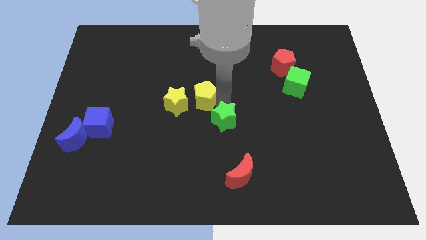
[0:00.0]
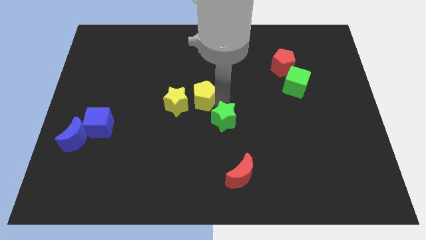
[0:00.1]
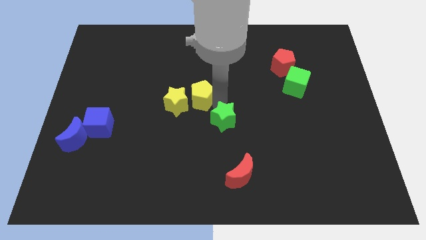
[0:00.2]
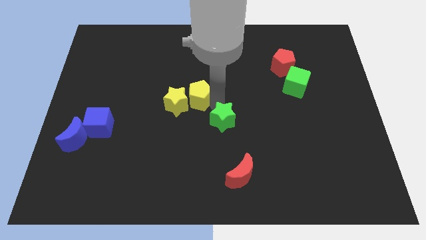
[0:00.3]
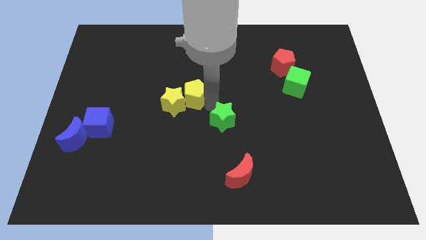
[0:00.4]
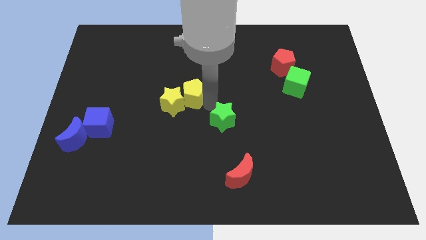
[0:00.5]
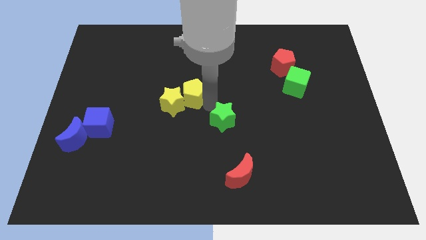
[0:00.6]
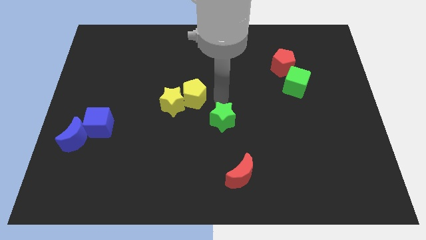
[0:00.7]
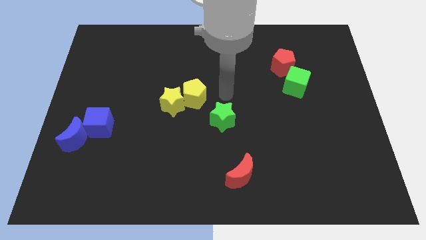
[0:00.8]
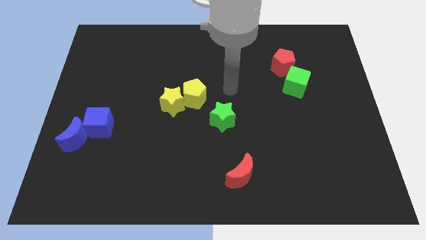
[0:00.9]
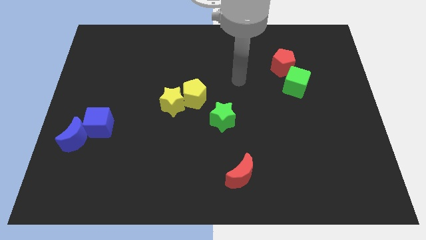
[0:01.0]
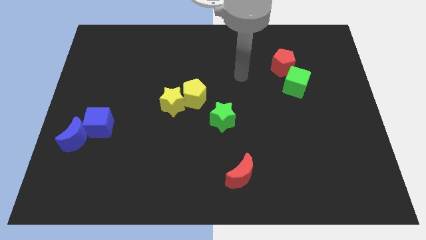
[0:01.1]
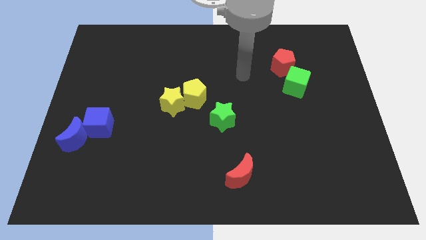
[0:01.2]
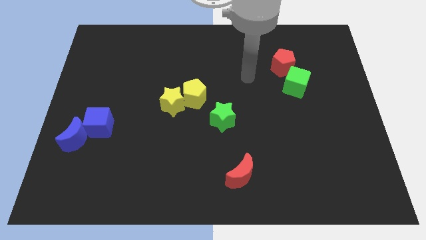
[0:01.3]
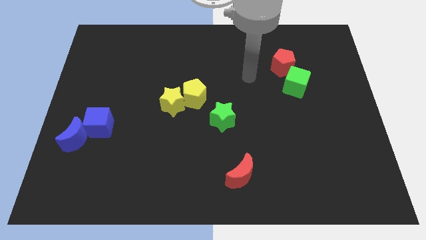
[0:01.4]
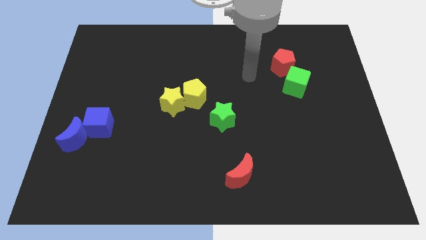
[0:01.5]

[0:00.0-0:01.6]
move the yellow pentagon into yellow star

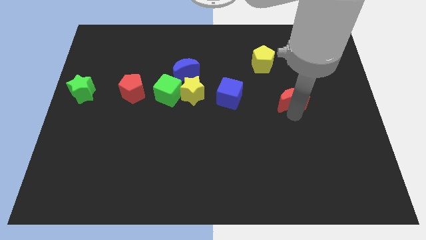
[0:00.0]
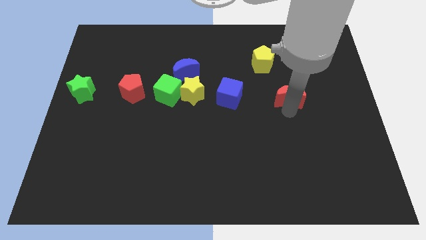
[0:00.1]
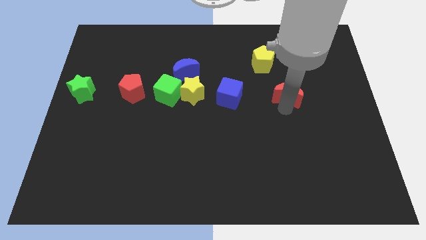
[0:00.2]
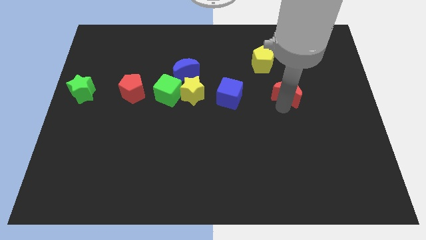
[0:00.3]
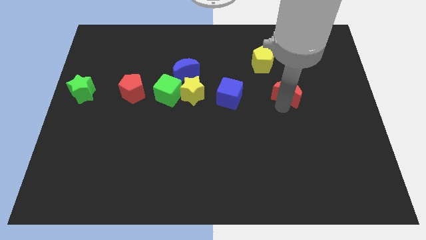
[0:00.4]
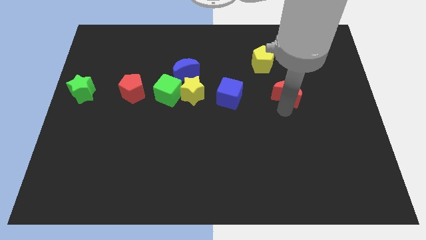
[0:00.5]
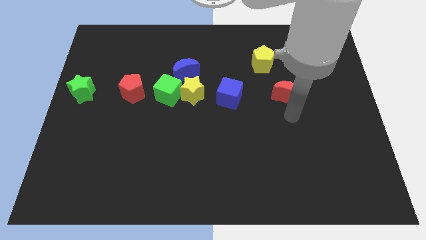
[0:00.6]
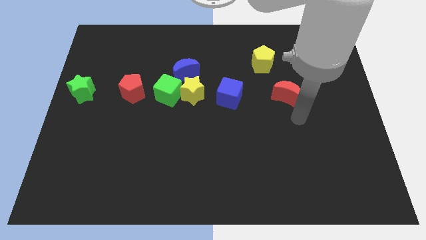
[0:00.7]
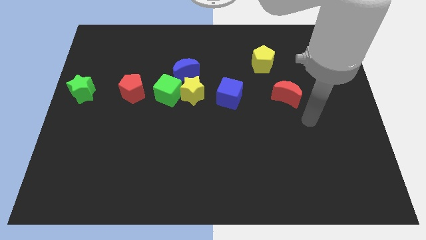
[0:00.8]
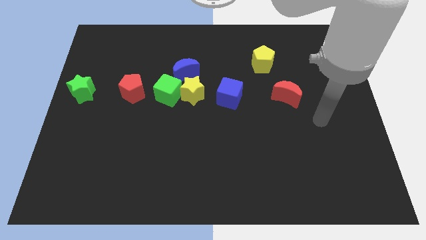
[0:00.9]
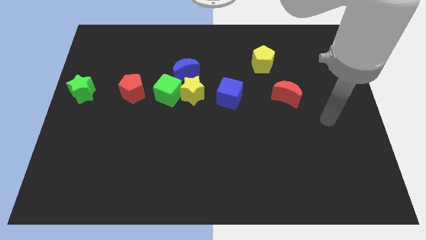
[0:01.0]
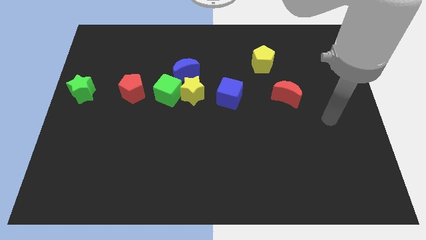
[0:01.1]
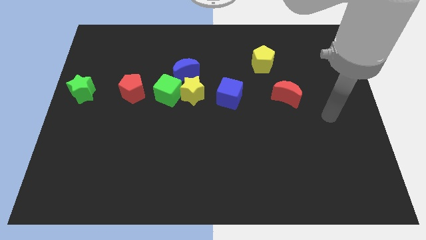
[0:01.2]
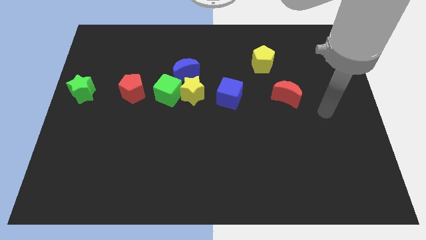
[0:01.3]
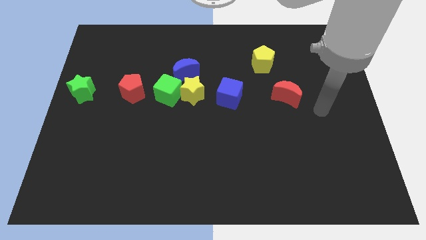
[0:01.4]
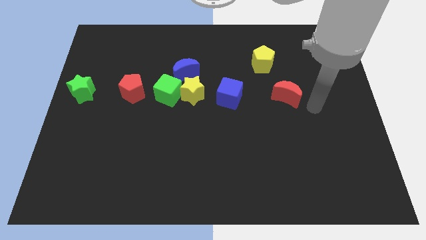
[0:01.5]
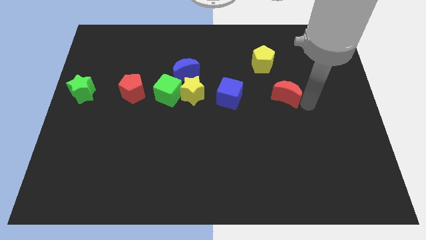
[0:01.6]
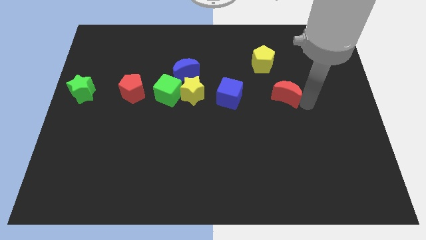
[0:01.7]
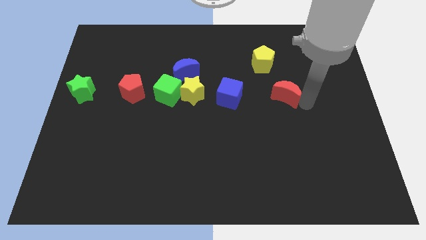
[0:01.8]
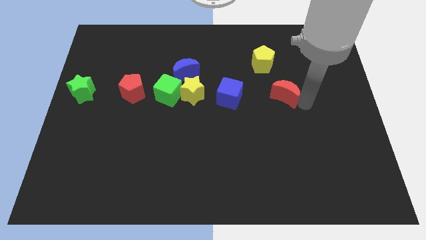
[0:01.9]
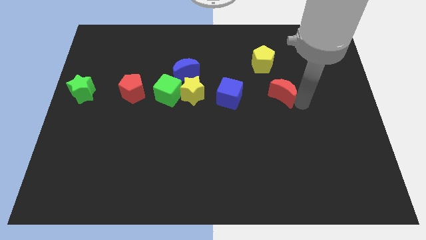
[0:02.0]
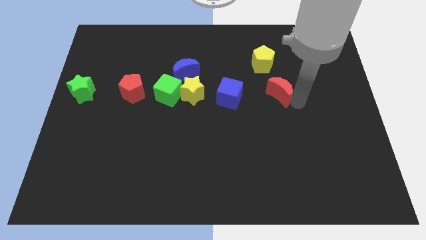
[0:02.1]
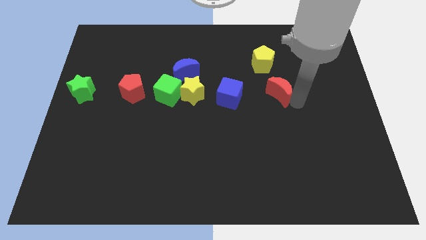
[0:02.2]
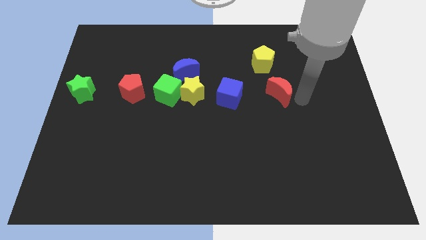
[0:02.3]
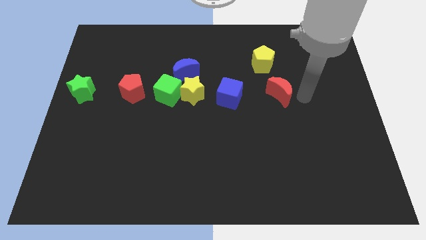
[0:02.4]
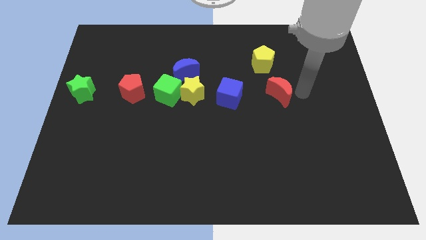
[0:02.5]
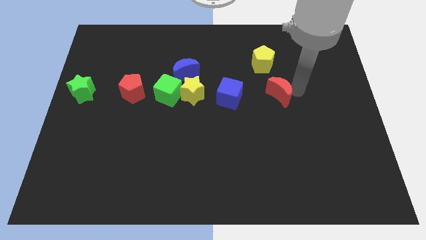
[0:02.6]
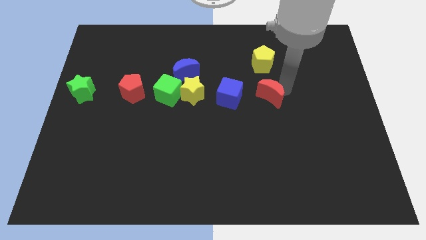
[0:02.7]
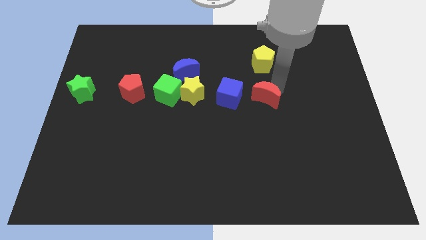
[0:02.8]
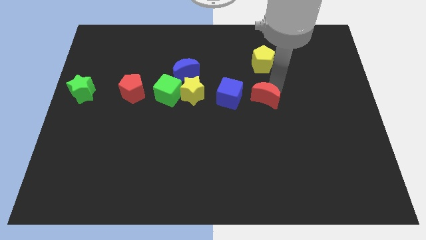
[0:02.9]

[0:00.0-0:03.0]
move the red crescent to the bottom of the yellow pentagon

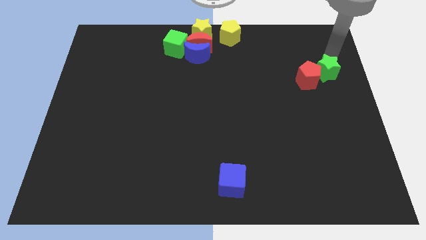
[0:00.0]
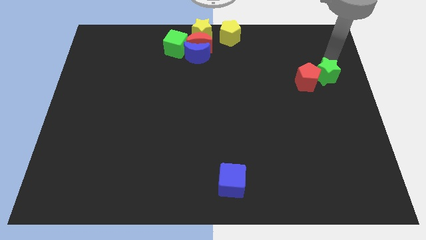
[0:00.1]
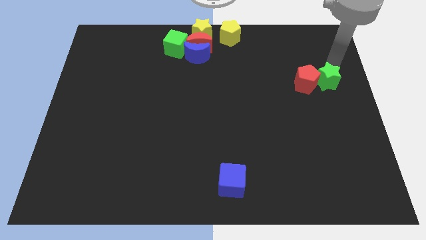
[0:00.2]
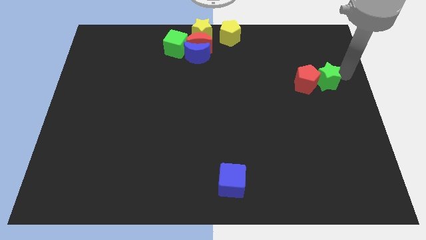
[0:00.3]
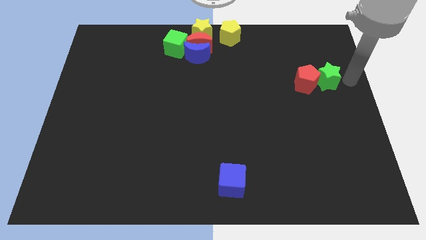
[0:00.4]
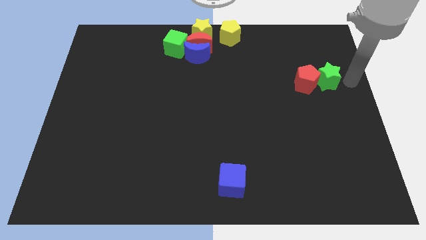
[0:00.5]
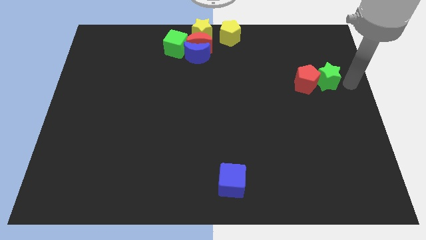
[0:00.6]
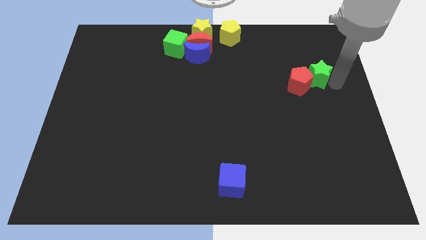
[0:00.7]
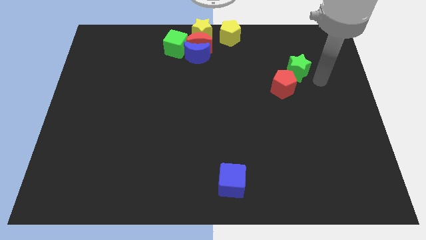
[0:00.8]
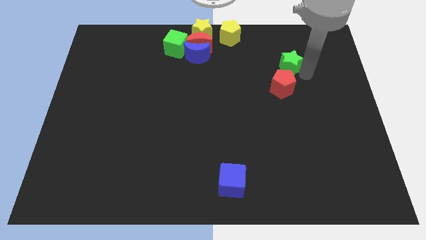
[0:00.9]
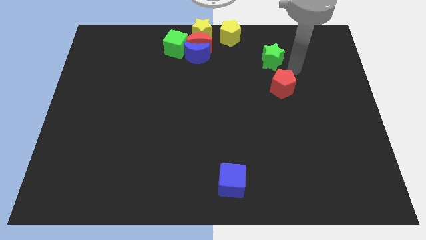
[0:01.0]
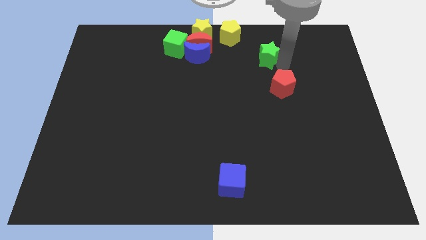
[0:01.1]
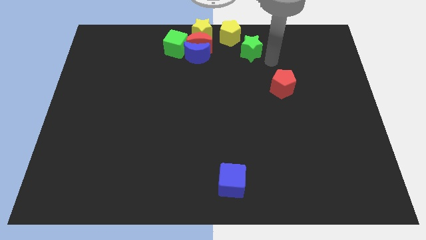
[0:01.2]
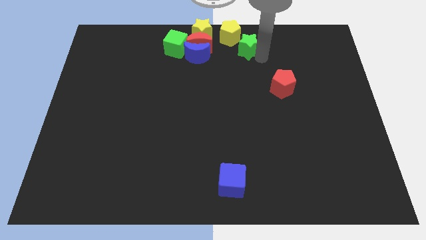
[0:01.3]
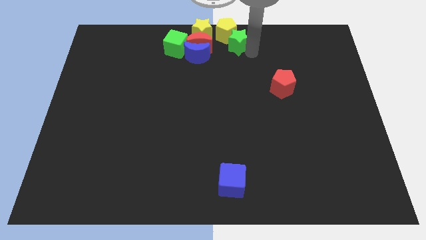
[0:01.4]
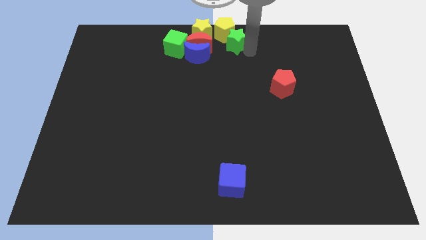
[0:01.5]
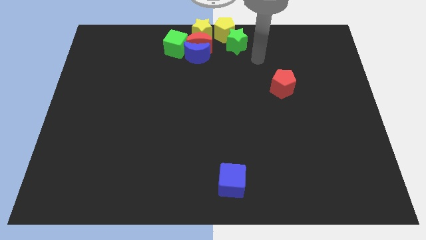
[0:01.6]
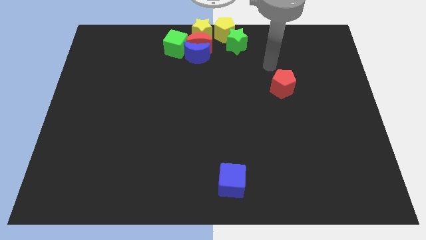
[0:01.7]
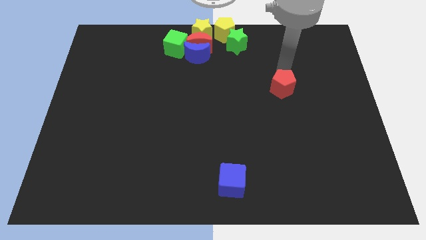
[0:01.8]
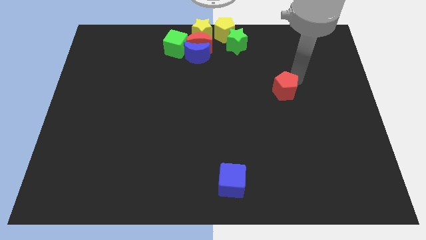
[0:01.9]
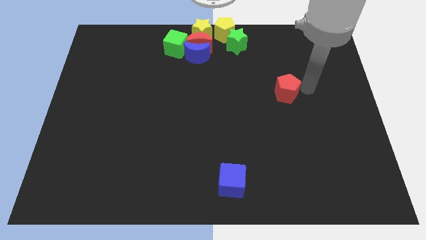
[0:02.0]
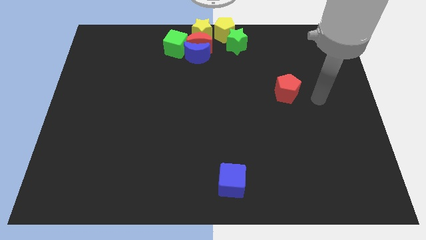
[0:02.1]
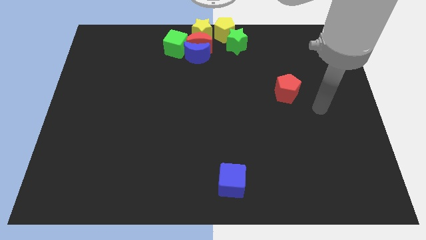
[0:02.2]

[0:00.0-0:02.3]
push the green star into the yellow pentagon

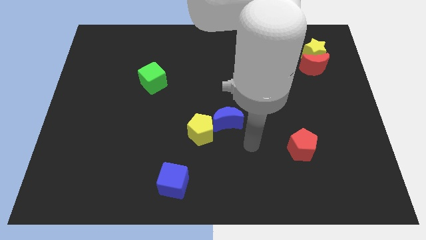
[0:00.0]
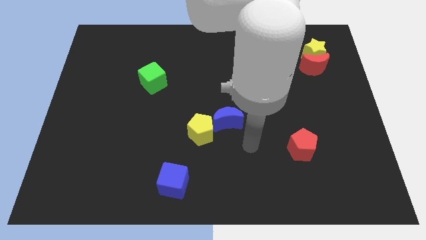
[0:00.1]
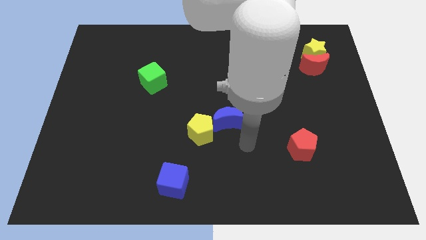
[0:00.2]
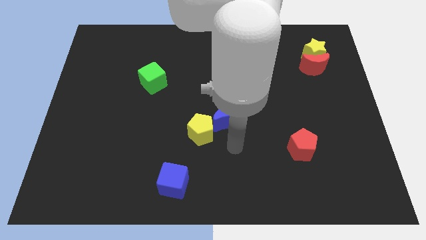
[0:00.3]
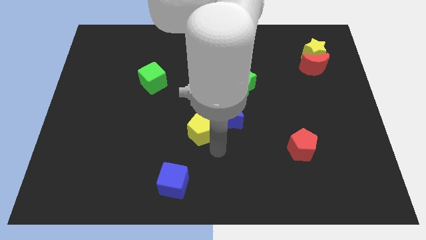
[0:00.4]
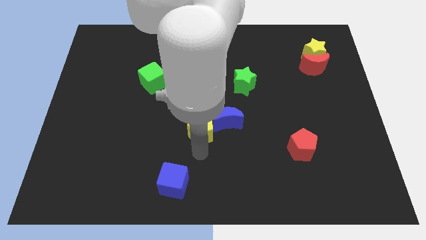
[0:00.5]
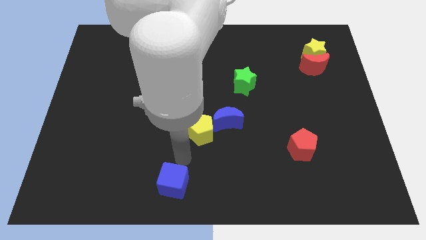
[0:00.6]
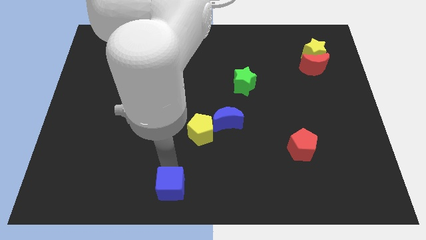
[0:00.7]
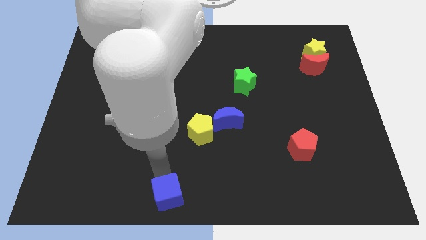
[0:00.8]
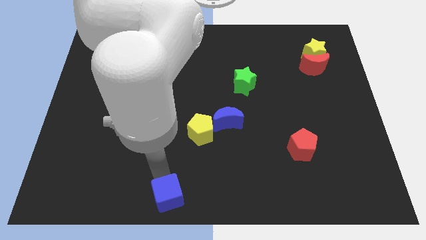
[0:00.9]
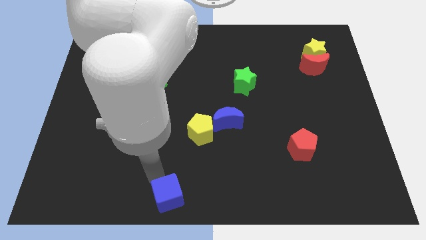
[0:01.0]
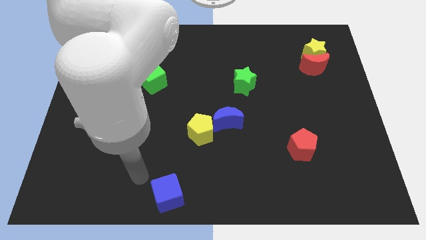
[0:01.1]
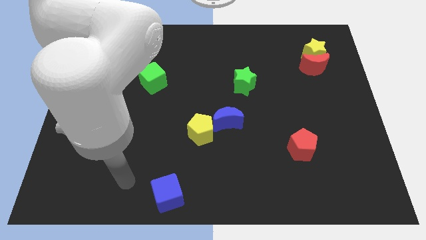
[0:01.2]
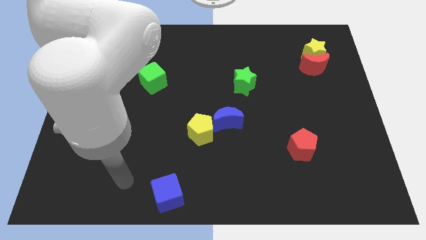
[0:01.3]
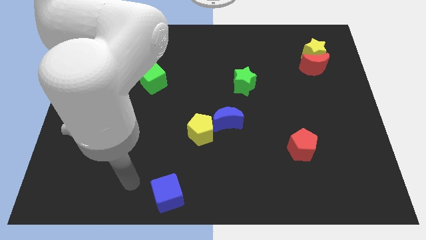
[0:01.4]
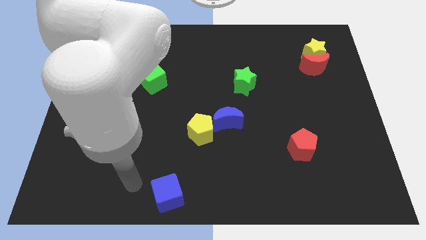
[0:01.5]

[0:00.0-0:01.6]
push the blue cube downwards slightly

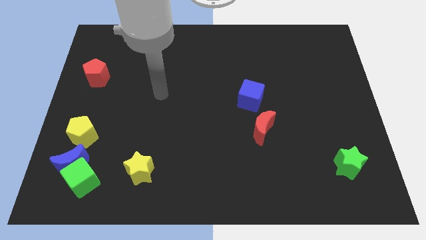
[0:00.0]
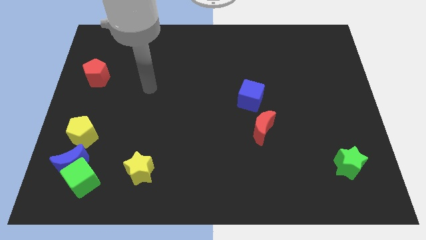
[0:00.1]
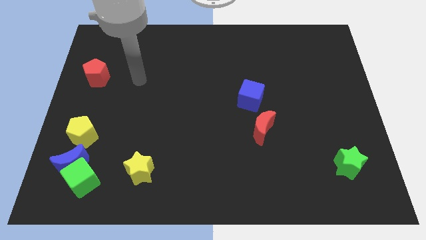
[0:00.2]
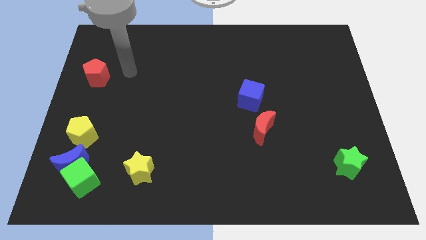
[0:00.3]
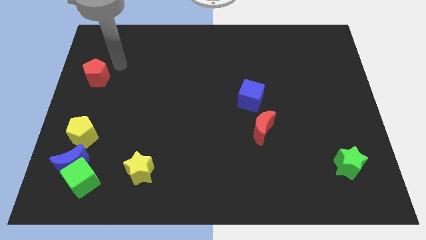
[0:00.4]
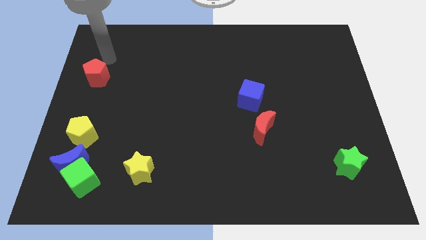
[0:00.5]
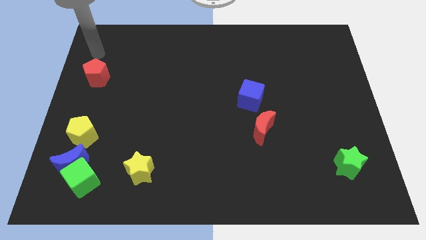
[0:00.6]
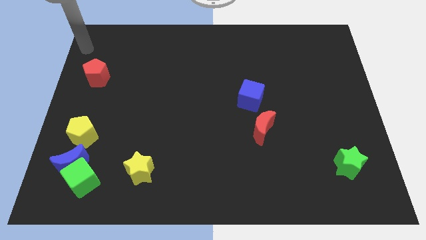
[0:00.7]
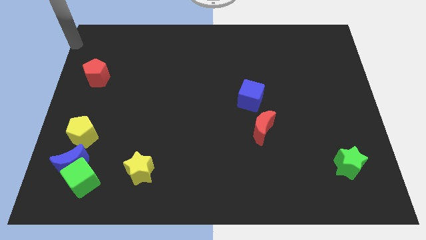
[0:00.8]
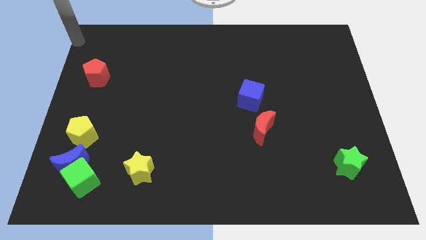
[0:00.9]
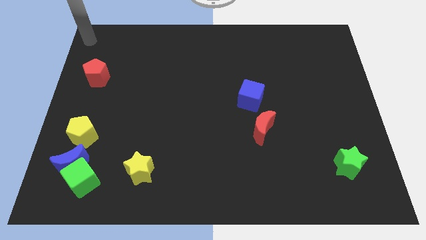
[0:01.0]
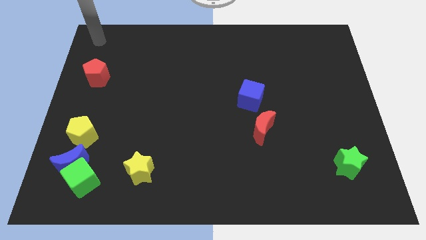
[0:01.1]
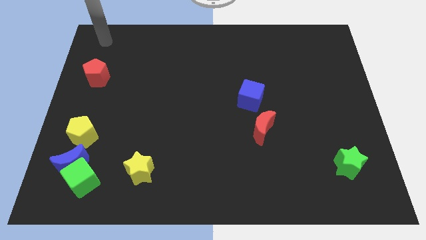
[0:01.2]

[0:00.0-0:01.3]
move your arm to the top of red pentagon
